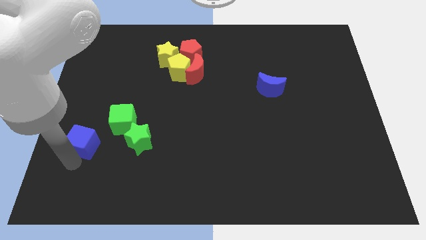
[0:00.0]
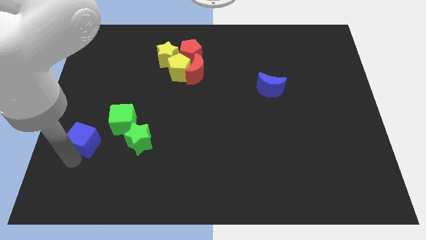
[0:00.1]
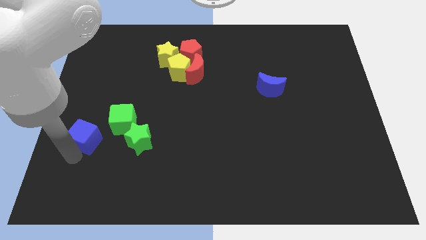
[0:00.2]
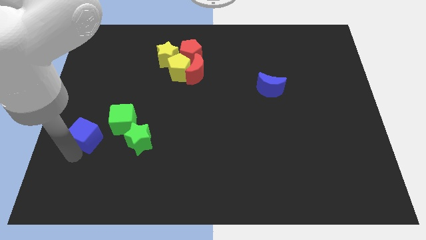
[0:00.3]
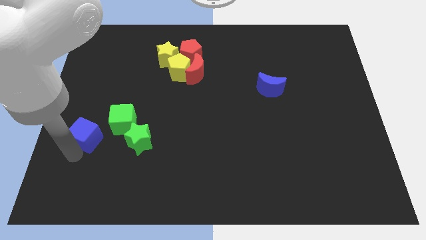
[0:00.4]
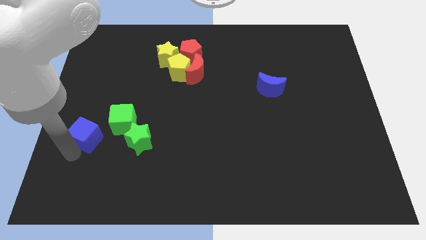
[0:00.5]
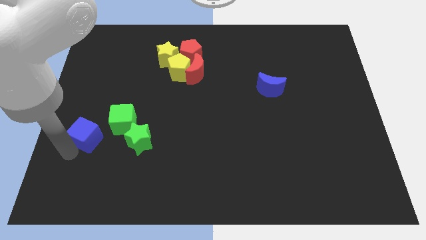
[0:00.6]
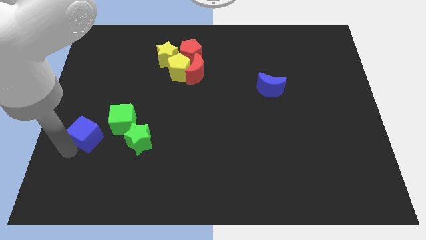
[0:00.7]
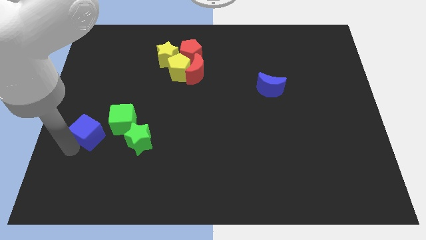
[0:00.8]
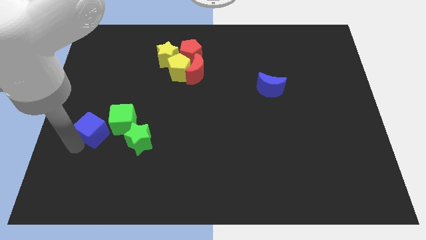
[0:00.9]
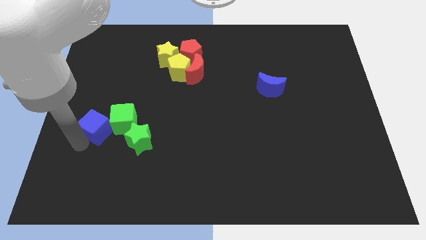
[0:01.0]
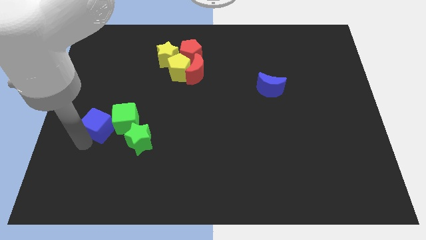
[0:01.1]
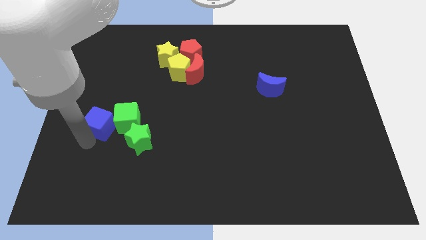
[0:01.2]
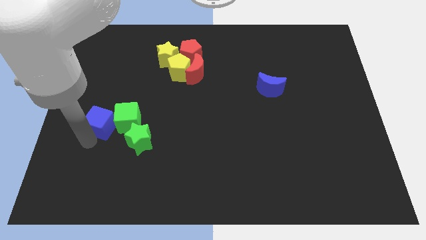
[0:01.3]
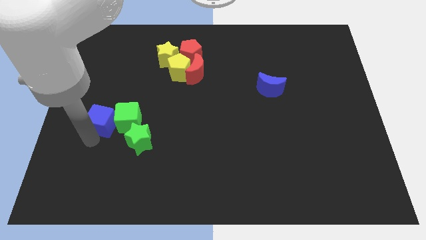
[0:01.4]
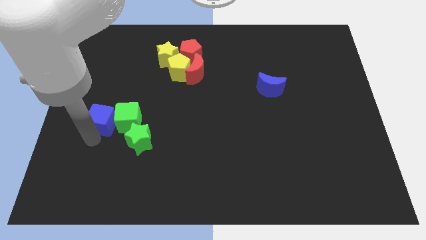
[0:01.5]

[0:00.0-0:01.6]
slide the blue cube into the green cube

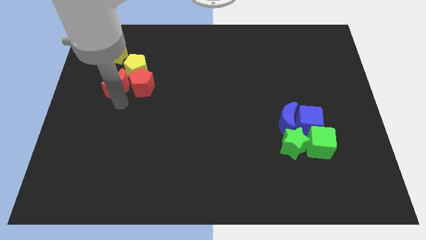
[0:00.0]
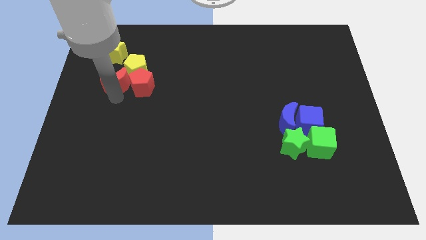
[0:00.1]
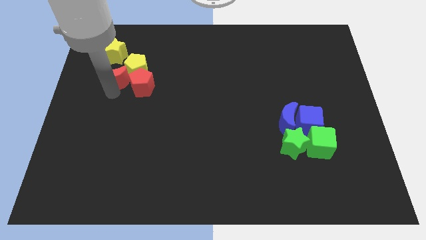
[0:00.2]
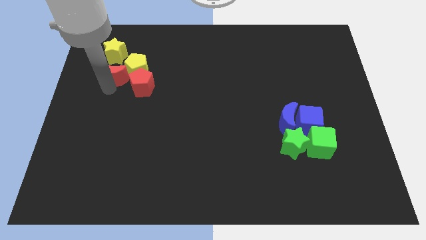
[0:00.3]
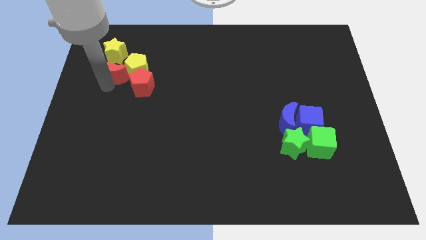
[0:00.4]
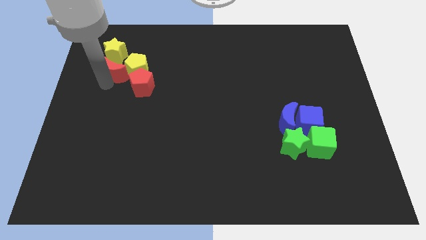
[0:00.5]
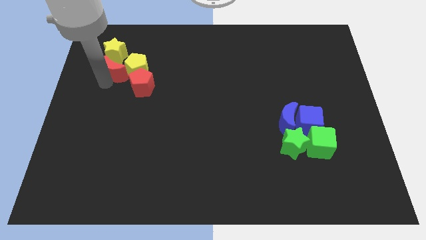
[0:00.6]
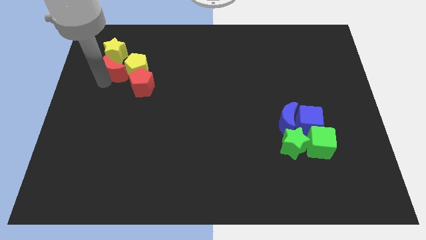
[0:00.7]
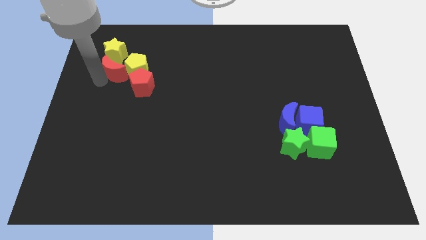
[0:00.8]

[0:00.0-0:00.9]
move the red crescent left to the yellow pentagon

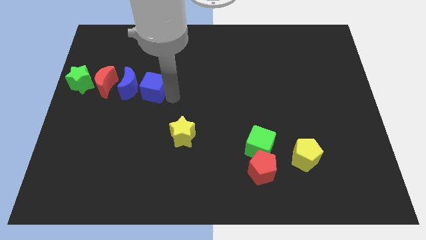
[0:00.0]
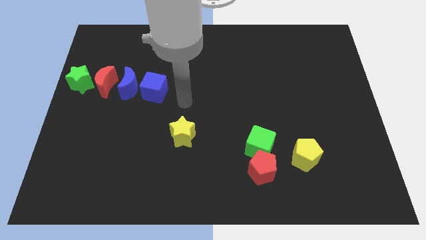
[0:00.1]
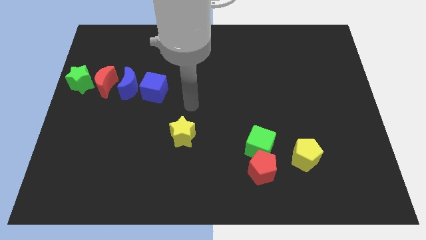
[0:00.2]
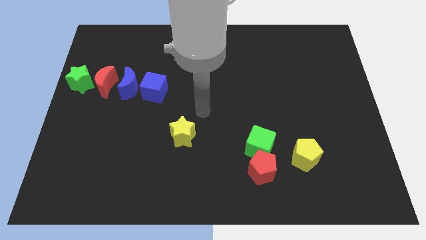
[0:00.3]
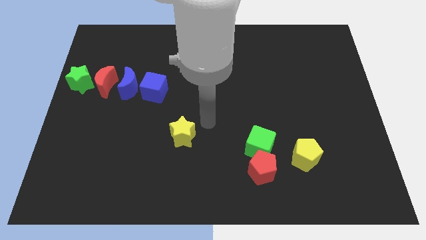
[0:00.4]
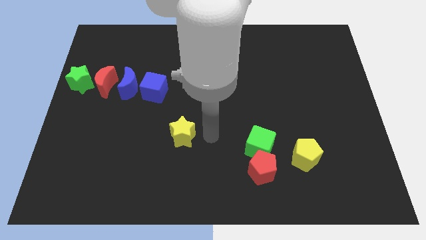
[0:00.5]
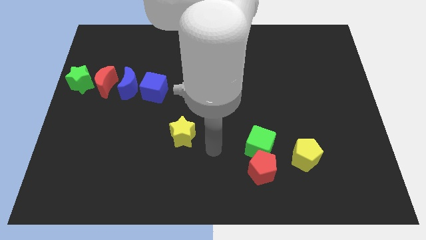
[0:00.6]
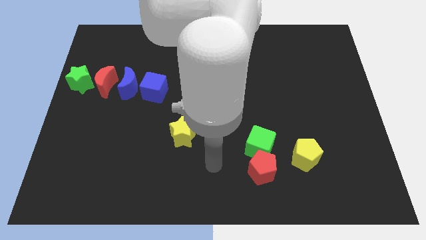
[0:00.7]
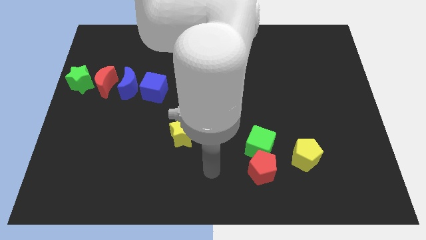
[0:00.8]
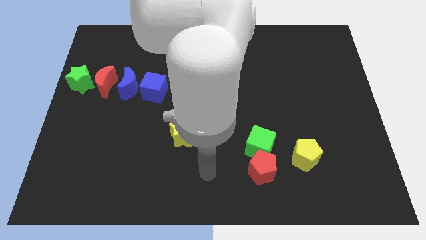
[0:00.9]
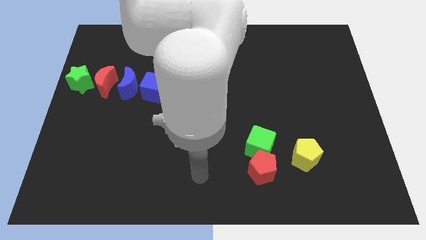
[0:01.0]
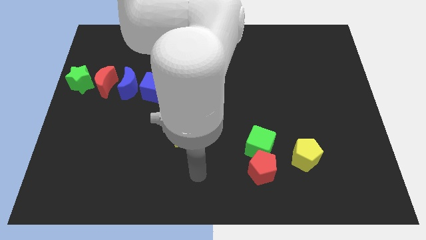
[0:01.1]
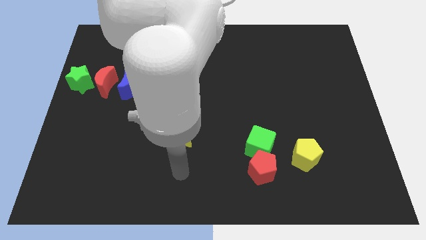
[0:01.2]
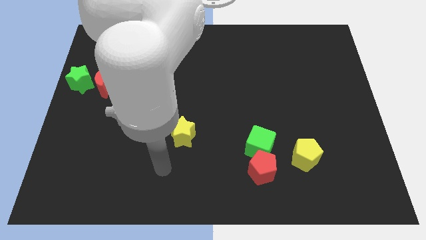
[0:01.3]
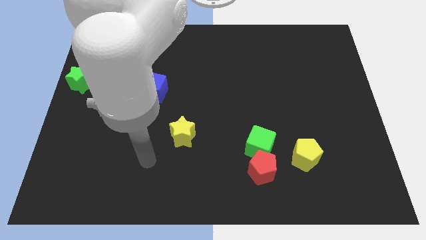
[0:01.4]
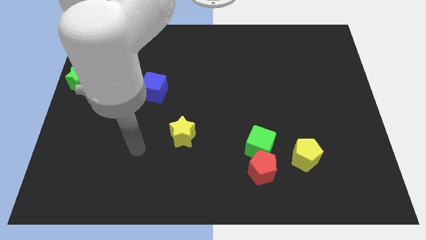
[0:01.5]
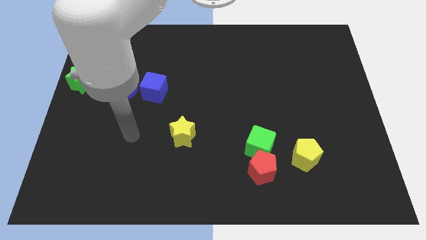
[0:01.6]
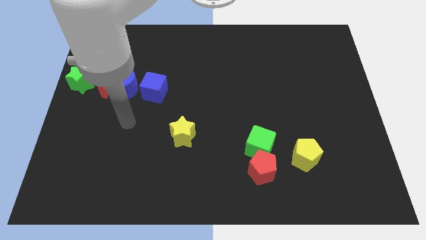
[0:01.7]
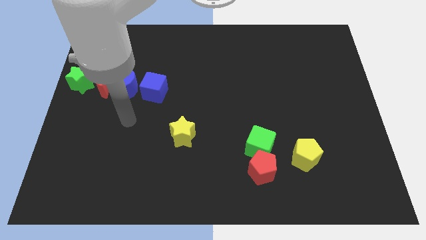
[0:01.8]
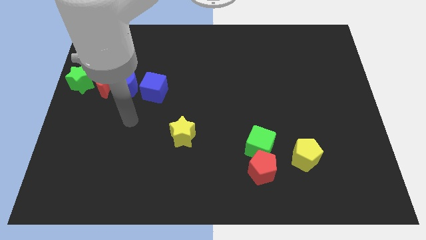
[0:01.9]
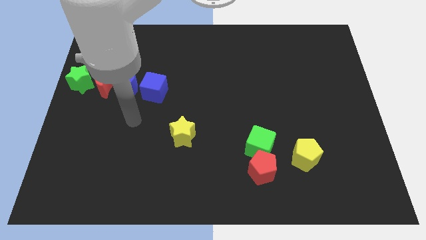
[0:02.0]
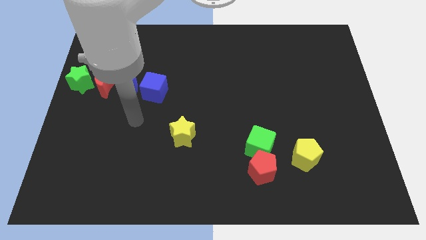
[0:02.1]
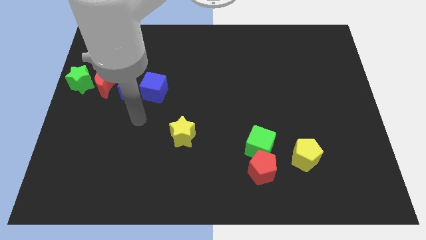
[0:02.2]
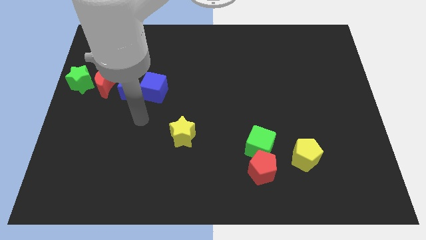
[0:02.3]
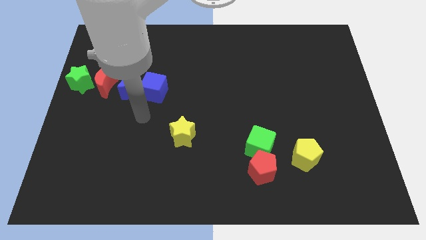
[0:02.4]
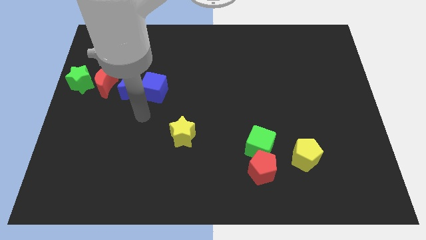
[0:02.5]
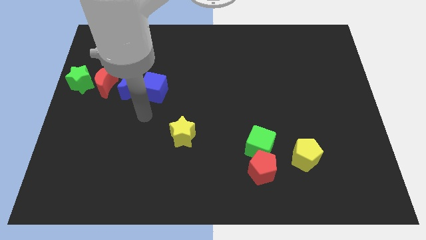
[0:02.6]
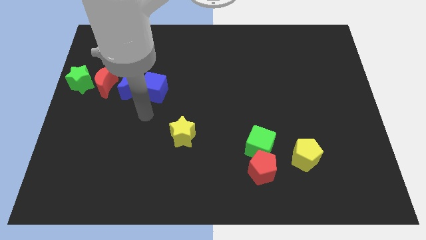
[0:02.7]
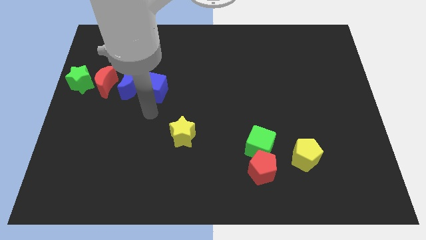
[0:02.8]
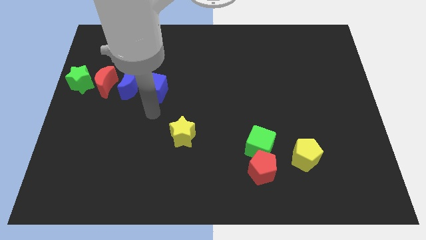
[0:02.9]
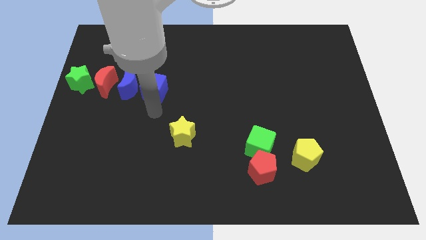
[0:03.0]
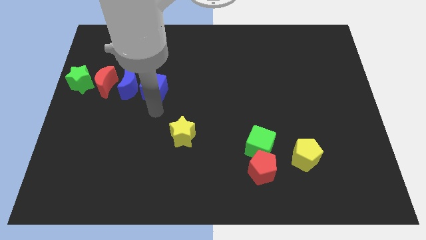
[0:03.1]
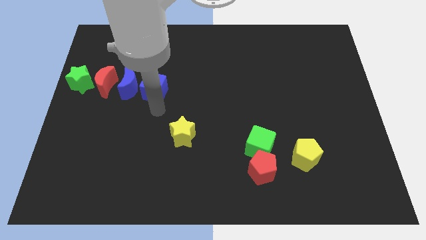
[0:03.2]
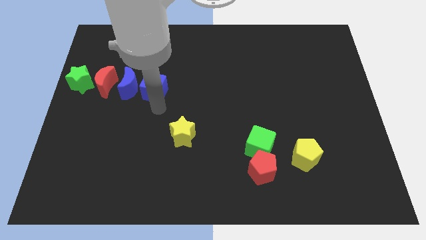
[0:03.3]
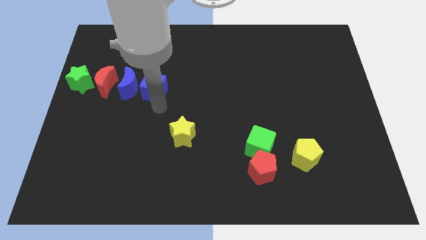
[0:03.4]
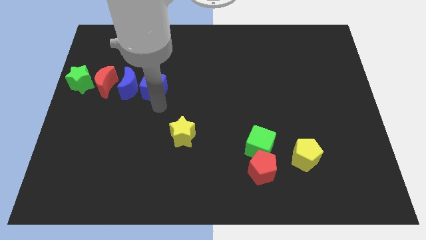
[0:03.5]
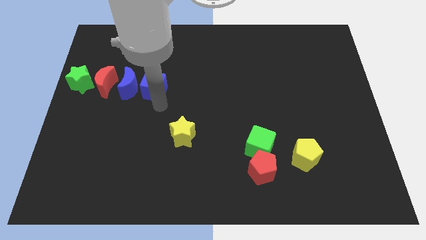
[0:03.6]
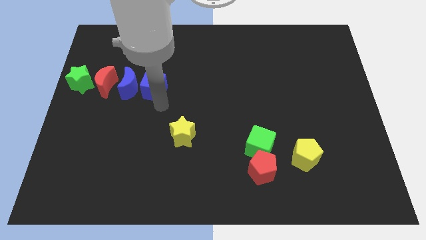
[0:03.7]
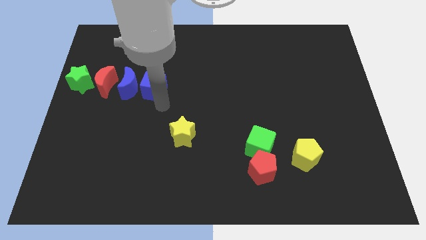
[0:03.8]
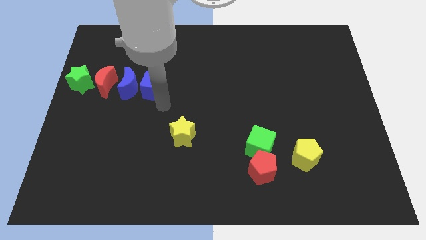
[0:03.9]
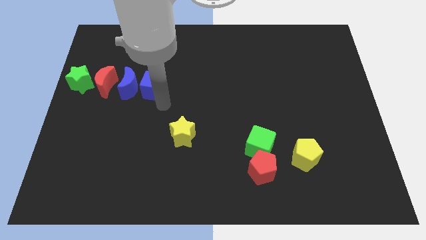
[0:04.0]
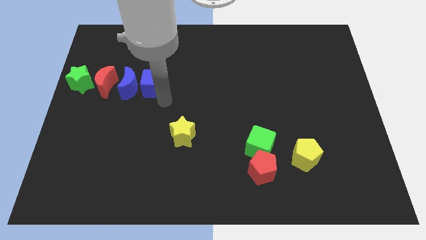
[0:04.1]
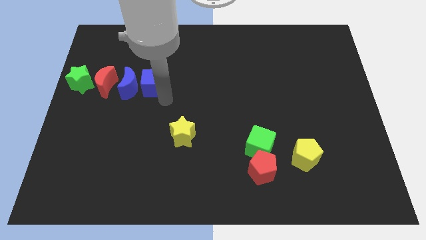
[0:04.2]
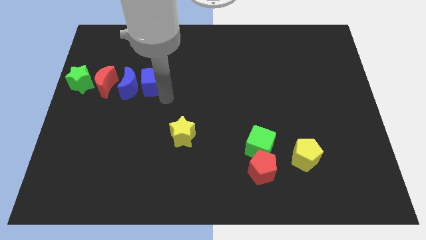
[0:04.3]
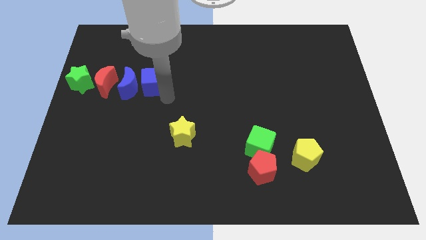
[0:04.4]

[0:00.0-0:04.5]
push the blue cube slightly towards up

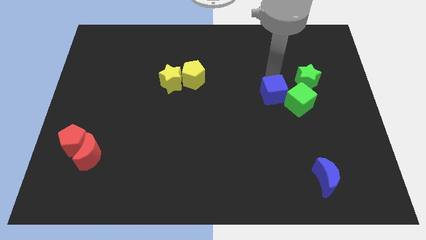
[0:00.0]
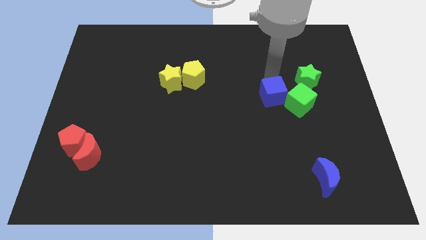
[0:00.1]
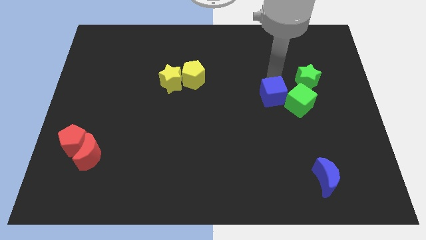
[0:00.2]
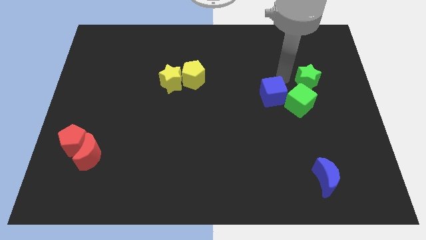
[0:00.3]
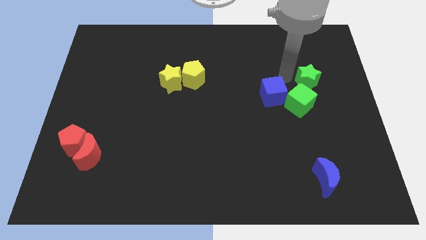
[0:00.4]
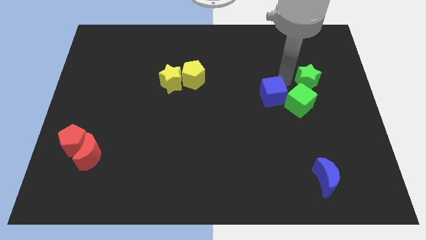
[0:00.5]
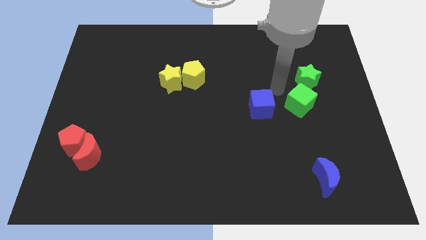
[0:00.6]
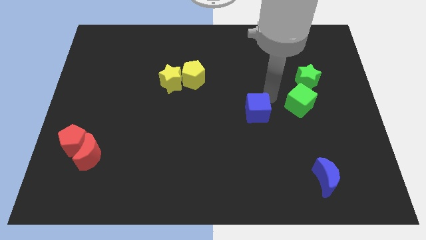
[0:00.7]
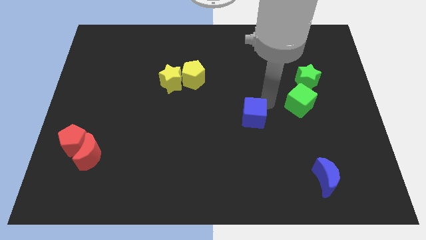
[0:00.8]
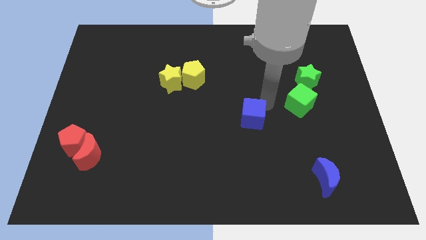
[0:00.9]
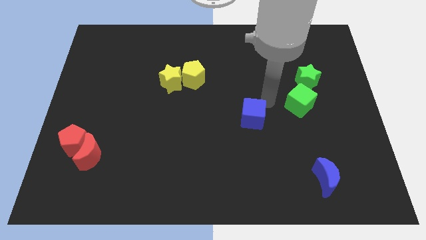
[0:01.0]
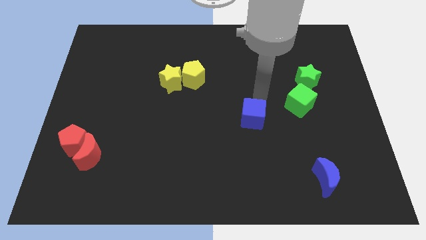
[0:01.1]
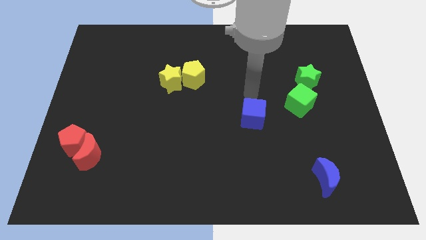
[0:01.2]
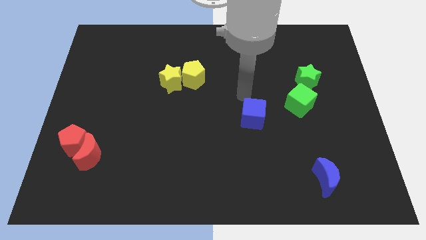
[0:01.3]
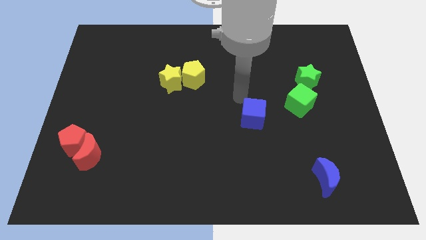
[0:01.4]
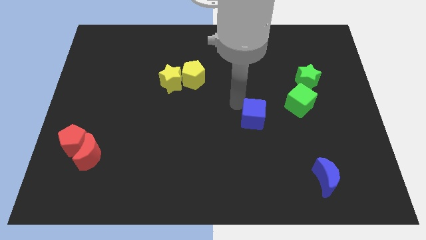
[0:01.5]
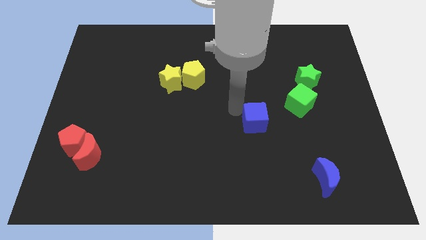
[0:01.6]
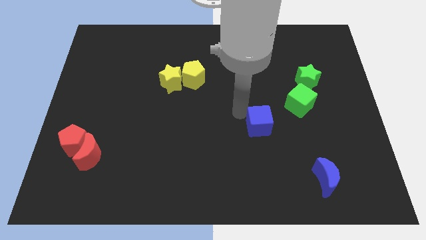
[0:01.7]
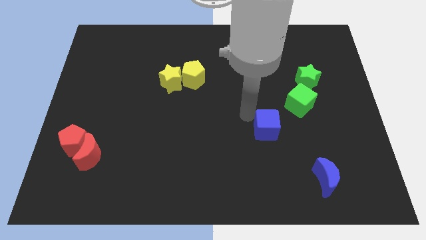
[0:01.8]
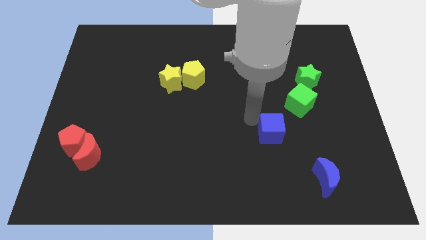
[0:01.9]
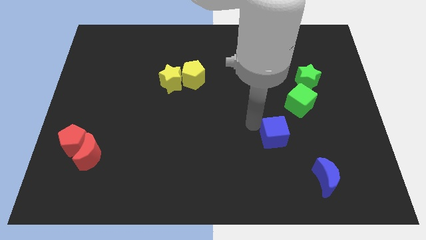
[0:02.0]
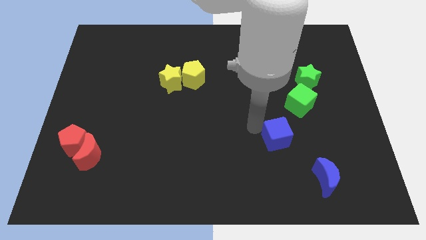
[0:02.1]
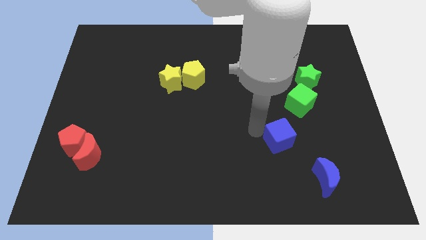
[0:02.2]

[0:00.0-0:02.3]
move the blue cube diagonally below the green cube
